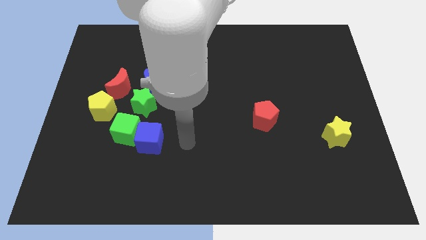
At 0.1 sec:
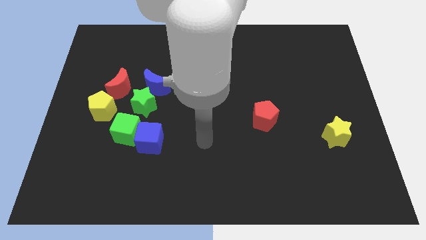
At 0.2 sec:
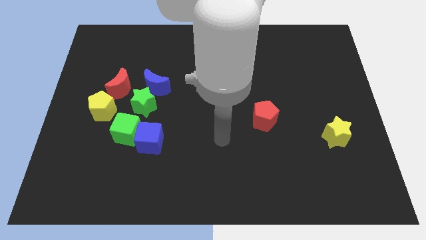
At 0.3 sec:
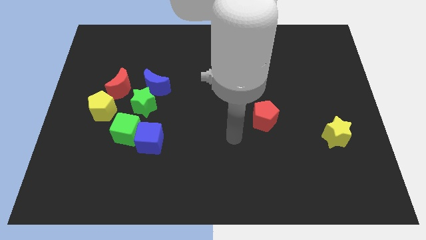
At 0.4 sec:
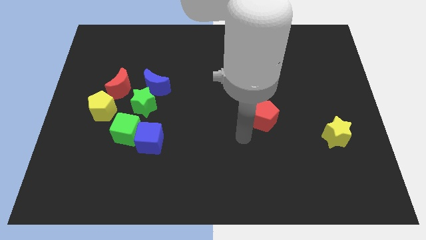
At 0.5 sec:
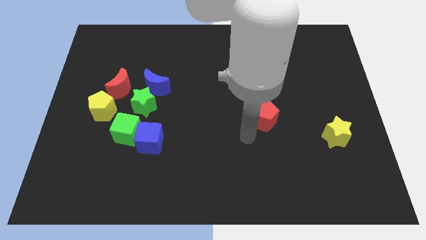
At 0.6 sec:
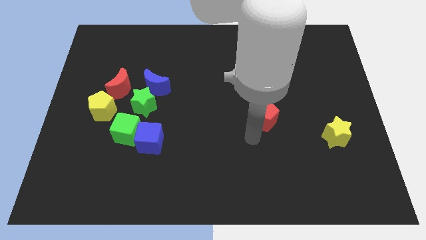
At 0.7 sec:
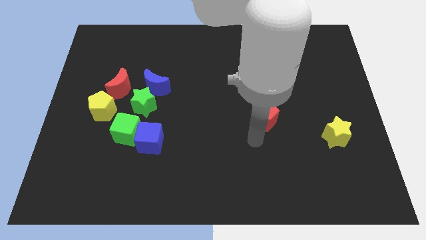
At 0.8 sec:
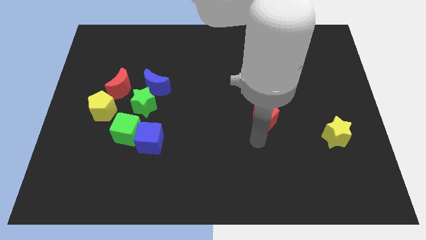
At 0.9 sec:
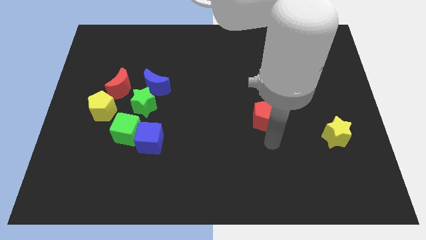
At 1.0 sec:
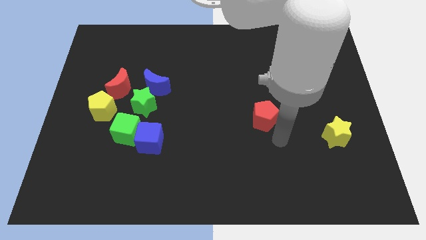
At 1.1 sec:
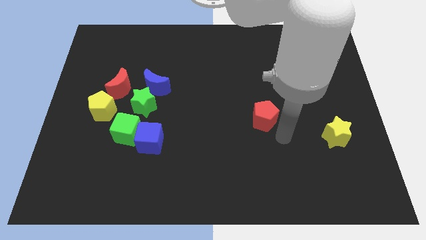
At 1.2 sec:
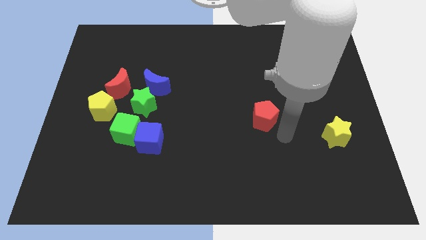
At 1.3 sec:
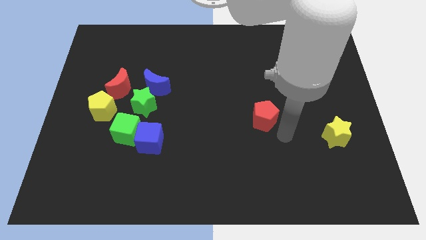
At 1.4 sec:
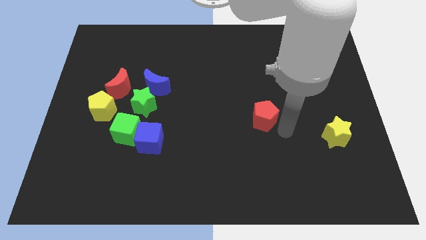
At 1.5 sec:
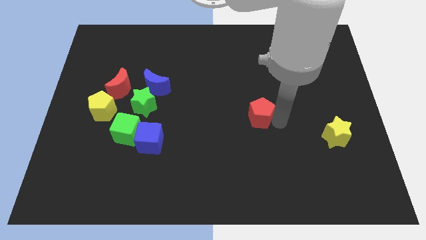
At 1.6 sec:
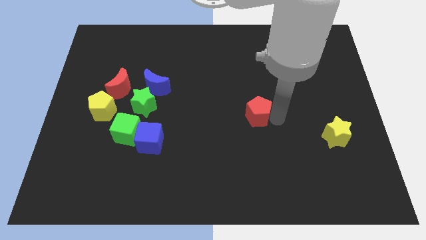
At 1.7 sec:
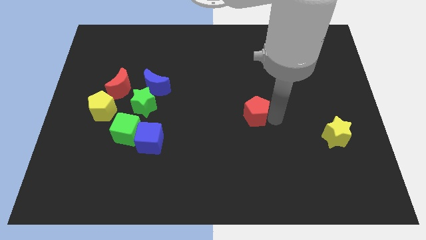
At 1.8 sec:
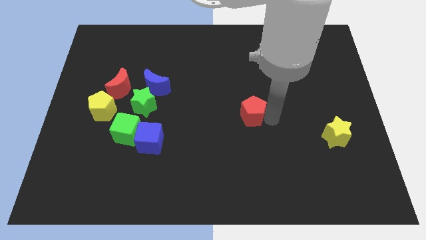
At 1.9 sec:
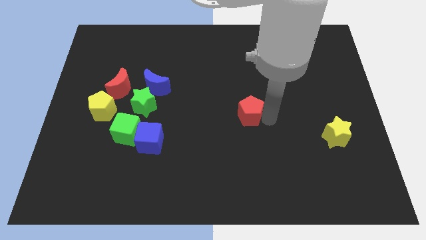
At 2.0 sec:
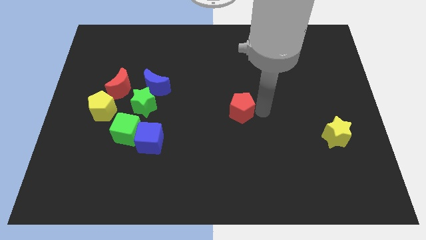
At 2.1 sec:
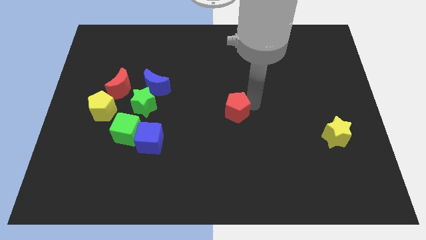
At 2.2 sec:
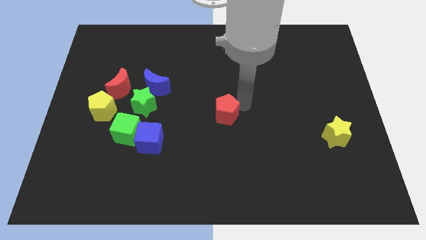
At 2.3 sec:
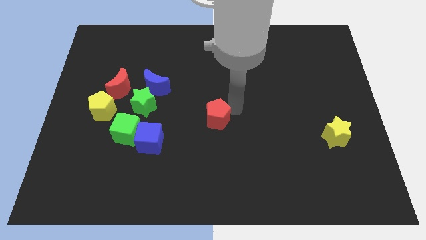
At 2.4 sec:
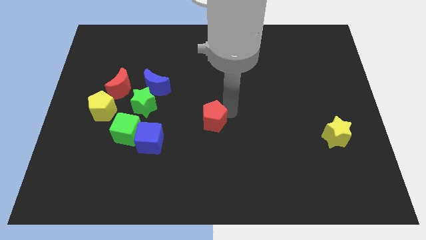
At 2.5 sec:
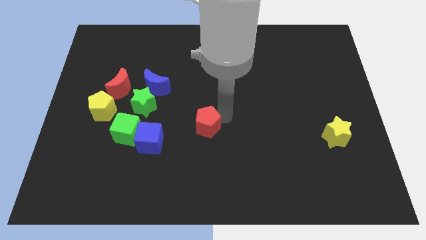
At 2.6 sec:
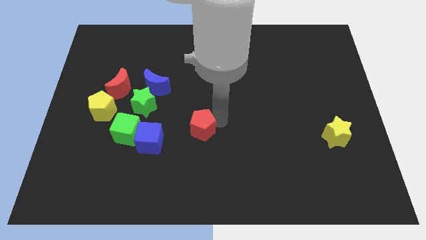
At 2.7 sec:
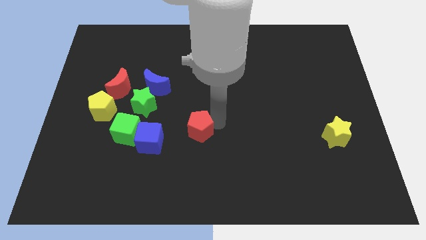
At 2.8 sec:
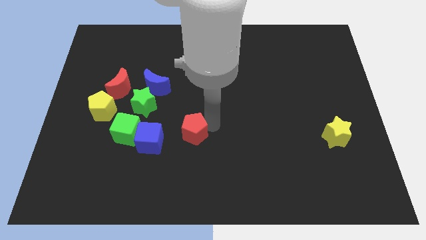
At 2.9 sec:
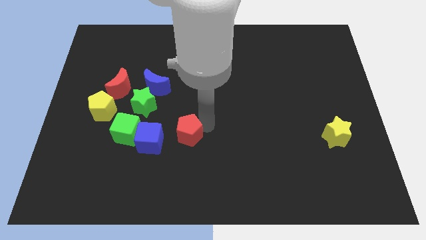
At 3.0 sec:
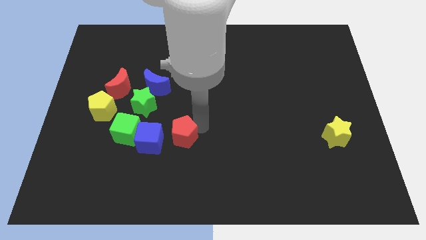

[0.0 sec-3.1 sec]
drag red pentagon close to blue cube

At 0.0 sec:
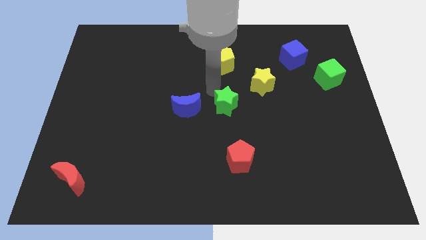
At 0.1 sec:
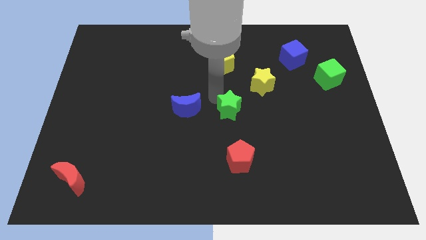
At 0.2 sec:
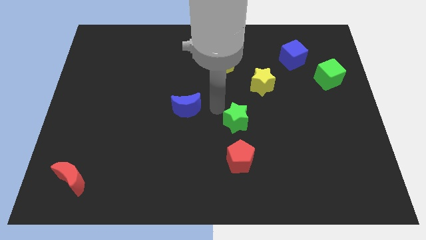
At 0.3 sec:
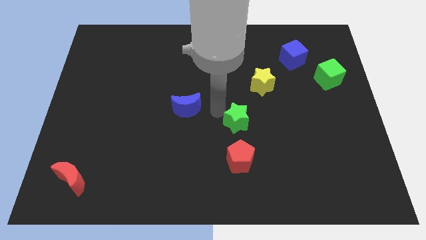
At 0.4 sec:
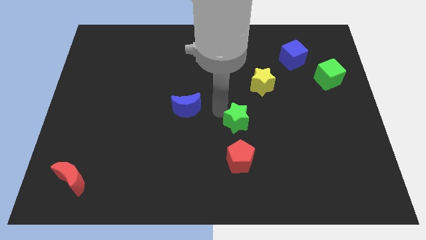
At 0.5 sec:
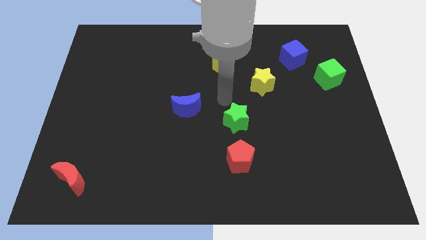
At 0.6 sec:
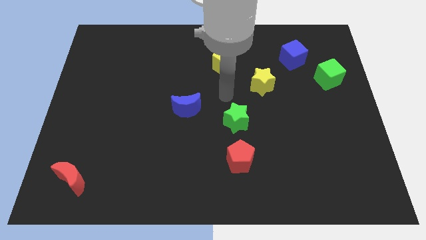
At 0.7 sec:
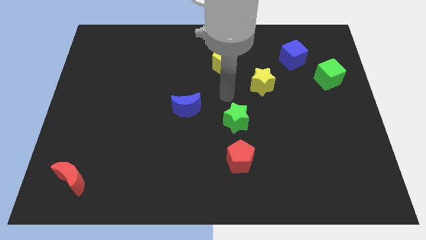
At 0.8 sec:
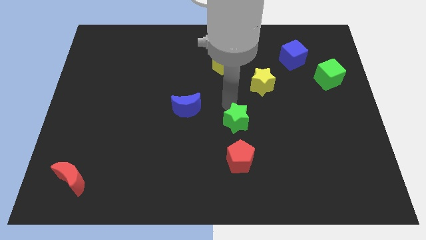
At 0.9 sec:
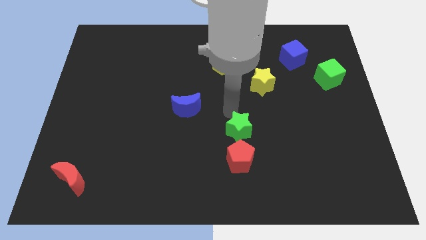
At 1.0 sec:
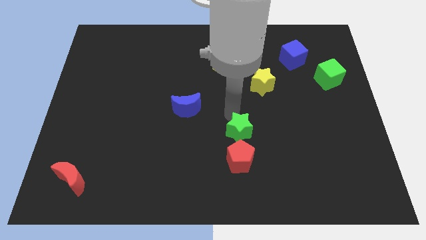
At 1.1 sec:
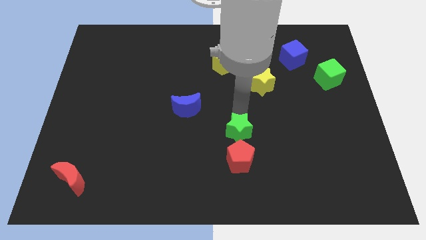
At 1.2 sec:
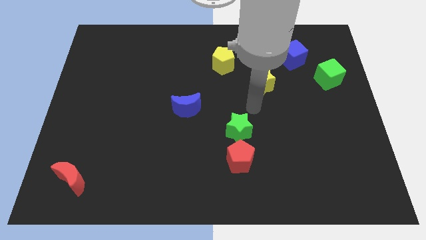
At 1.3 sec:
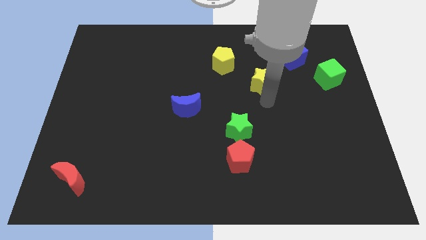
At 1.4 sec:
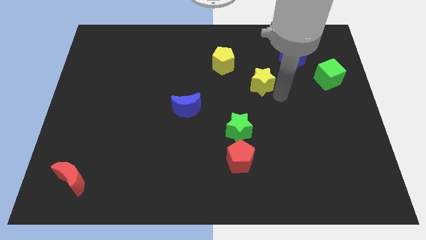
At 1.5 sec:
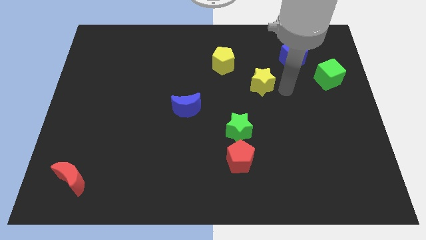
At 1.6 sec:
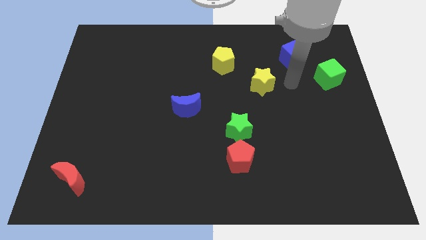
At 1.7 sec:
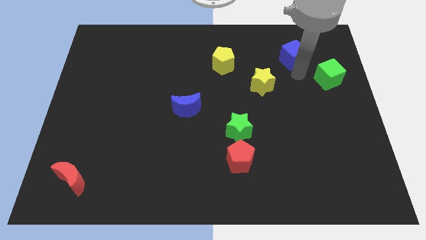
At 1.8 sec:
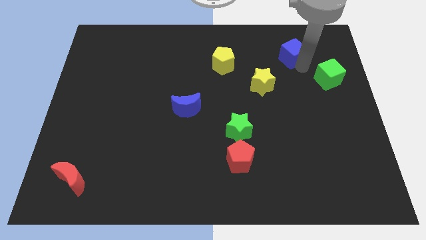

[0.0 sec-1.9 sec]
push the green star towards red pentagan

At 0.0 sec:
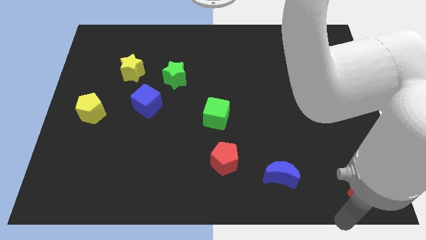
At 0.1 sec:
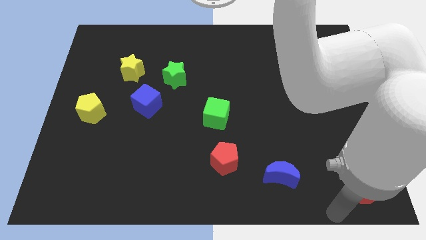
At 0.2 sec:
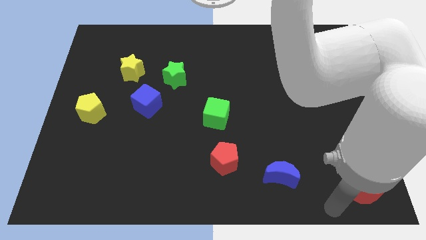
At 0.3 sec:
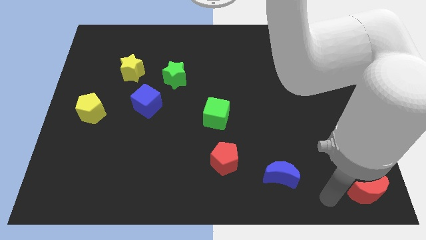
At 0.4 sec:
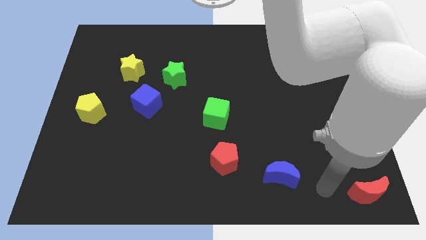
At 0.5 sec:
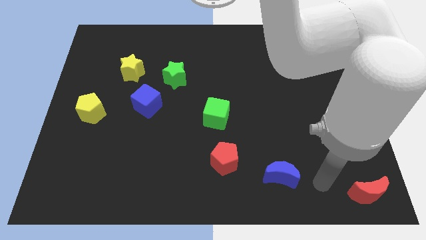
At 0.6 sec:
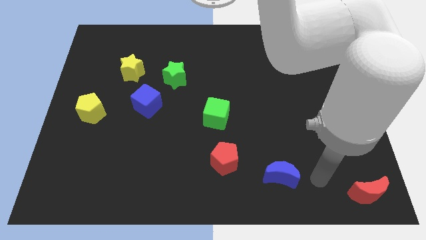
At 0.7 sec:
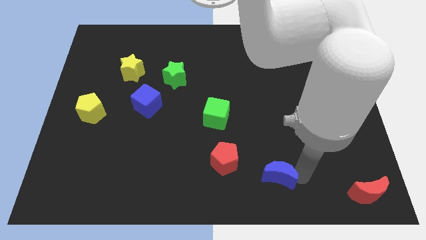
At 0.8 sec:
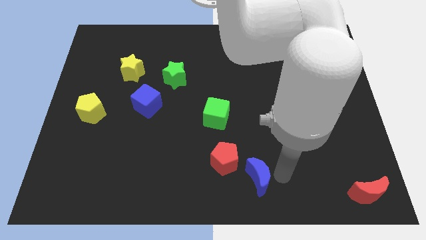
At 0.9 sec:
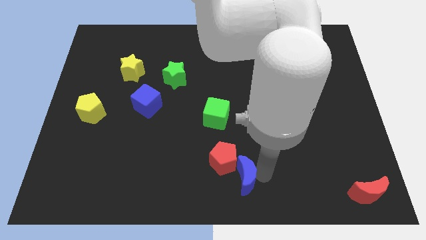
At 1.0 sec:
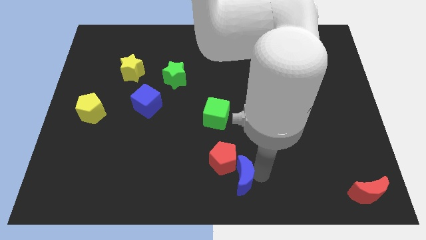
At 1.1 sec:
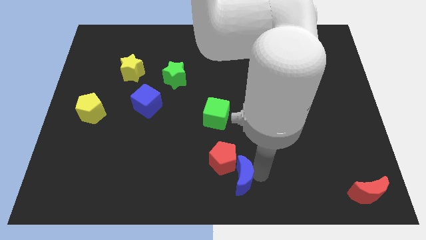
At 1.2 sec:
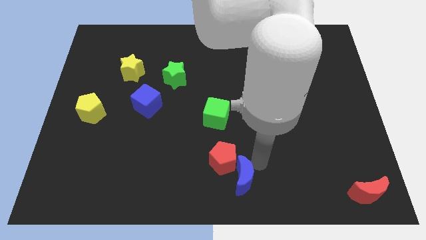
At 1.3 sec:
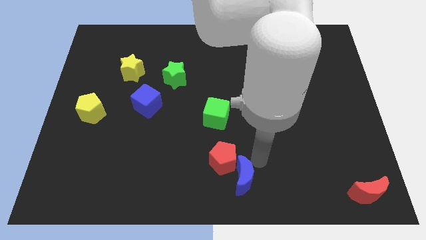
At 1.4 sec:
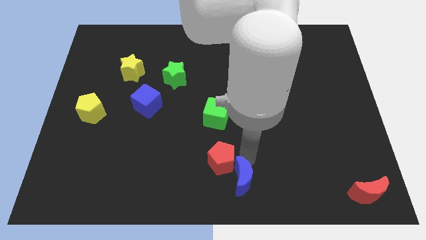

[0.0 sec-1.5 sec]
push the blue moon into the red pentagon

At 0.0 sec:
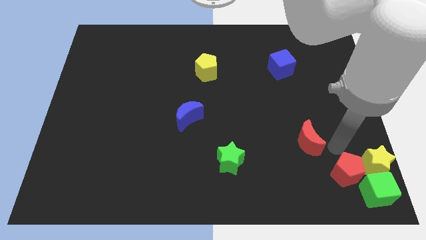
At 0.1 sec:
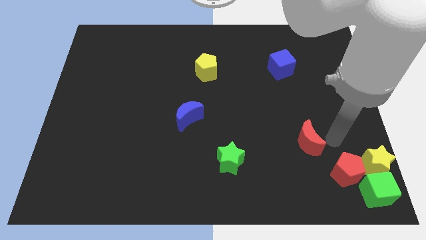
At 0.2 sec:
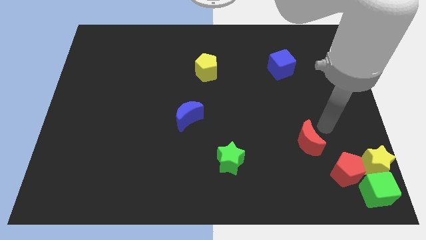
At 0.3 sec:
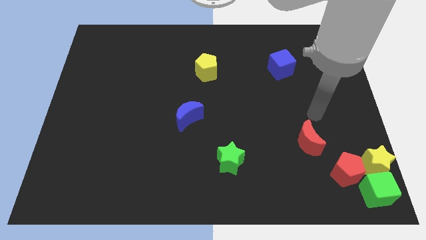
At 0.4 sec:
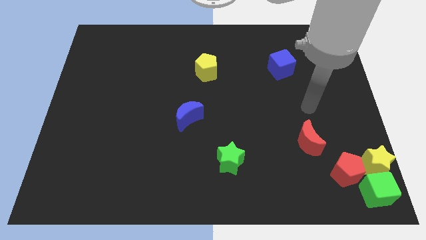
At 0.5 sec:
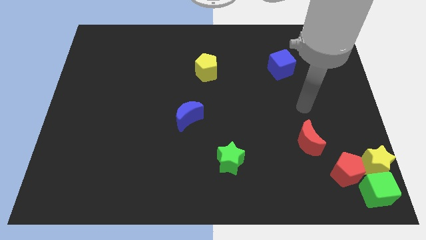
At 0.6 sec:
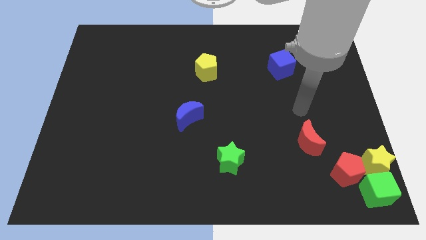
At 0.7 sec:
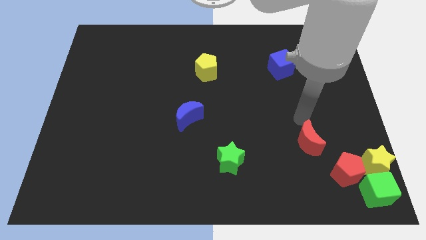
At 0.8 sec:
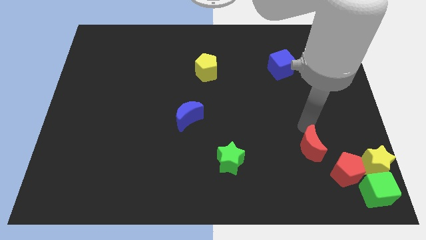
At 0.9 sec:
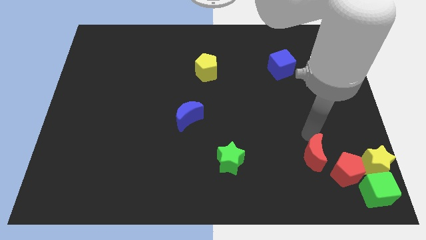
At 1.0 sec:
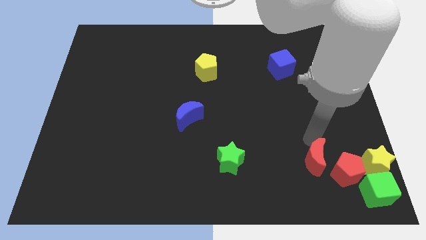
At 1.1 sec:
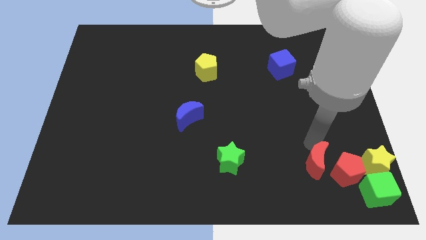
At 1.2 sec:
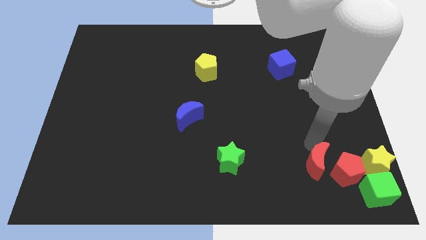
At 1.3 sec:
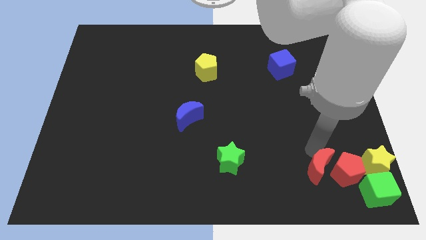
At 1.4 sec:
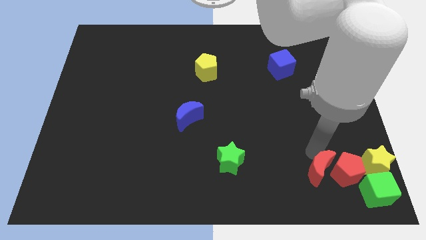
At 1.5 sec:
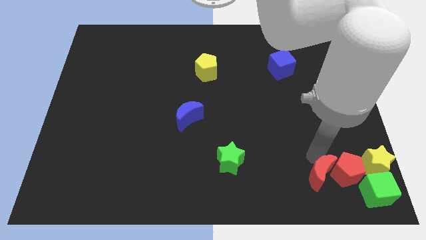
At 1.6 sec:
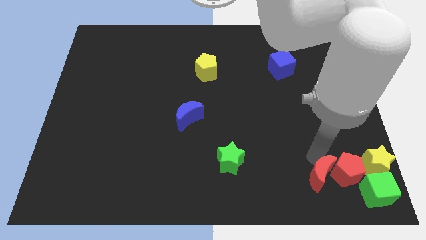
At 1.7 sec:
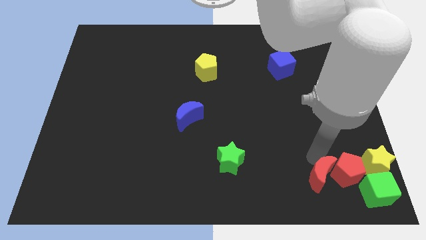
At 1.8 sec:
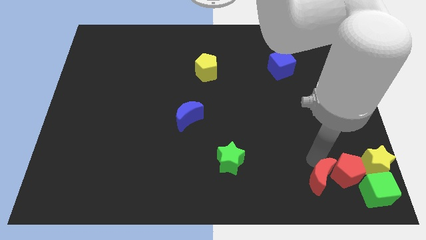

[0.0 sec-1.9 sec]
move the red crescent to the left of the red pentagon

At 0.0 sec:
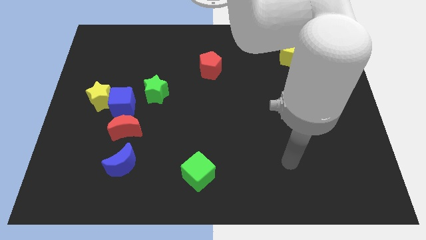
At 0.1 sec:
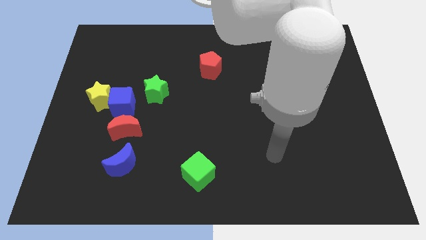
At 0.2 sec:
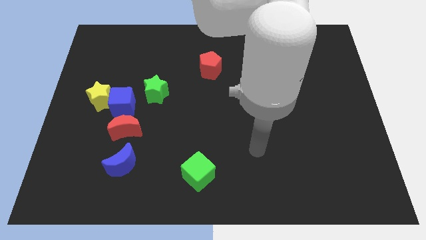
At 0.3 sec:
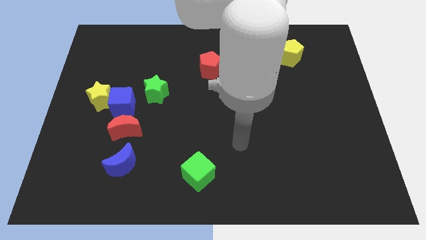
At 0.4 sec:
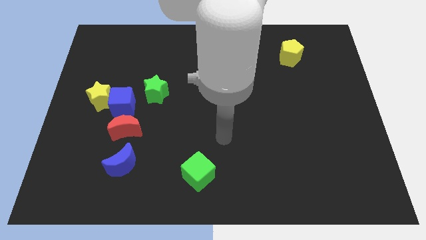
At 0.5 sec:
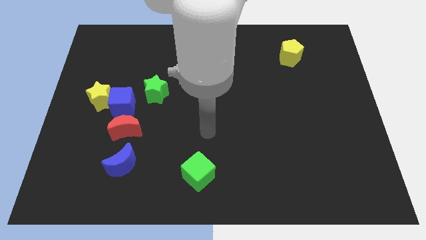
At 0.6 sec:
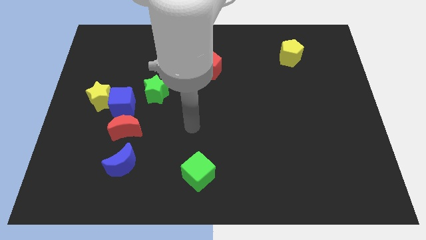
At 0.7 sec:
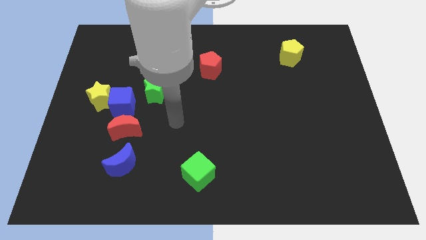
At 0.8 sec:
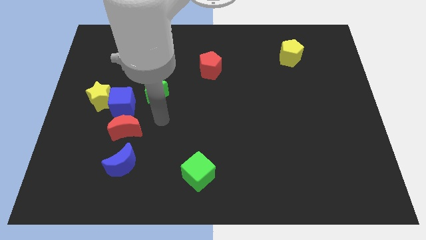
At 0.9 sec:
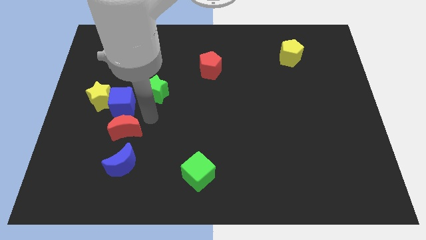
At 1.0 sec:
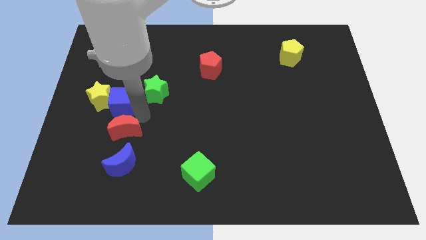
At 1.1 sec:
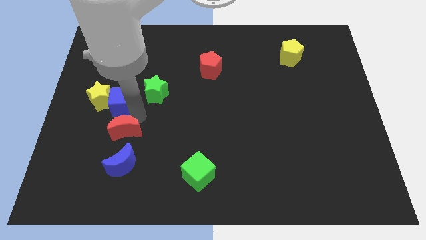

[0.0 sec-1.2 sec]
place your arm to the top of red moon
